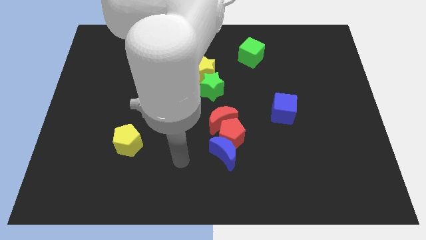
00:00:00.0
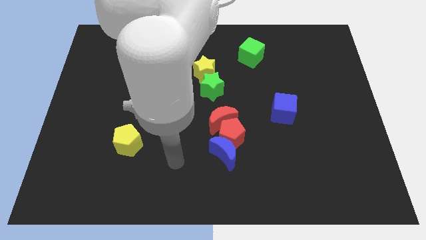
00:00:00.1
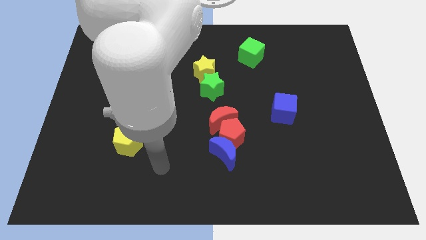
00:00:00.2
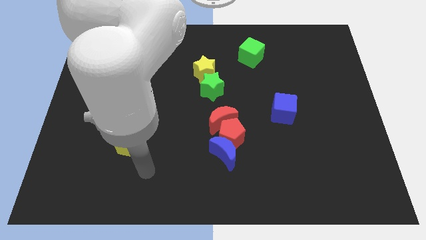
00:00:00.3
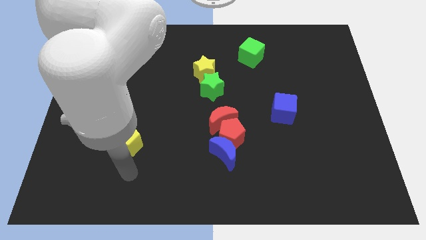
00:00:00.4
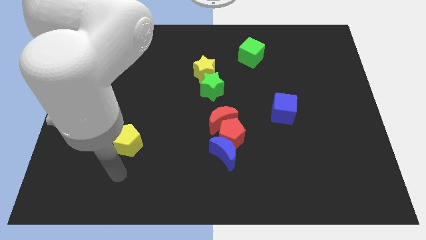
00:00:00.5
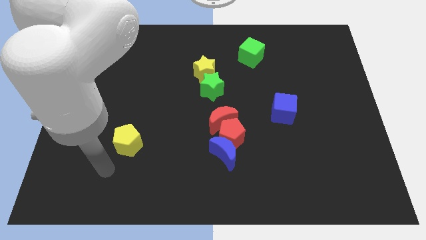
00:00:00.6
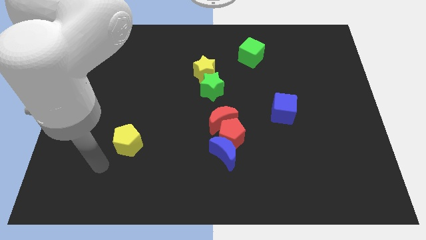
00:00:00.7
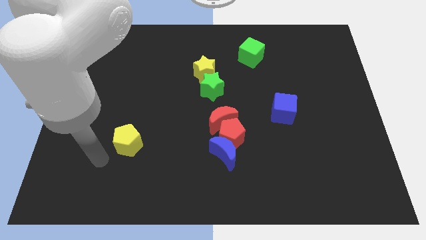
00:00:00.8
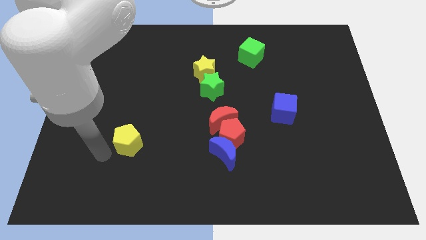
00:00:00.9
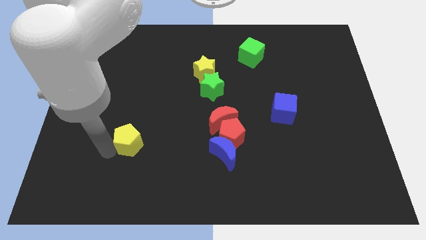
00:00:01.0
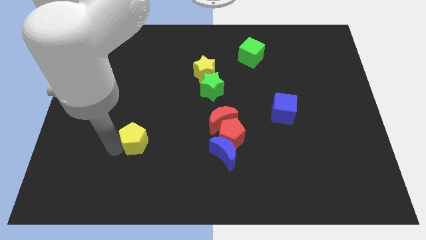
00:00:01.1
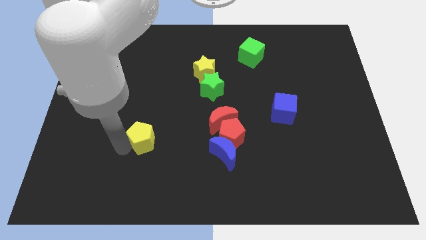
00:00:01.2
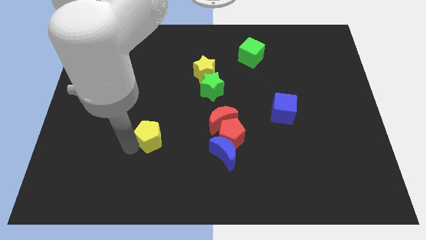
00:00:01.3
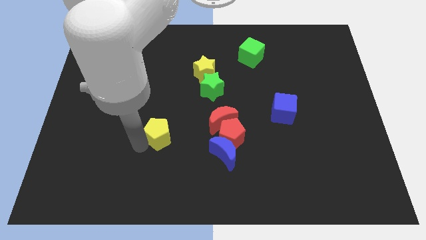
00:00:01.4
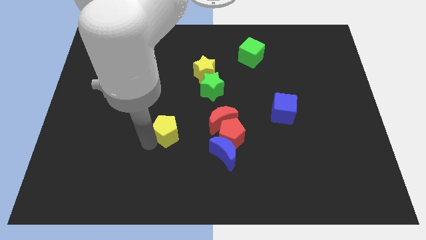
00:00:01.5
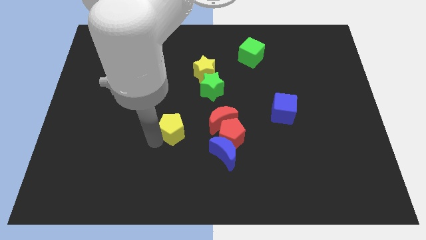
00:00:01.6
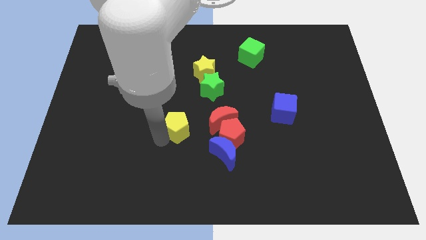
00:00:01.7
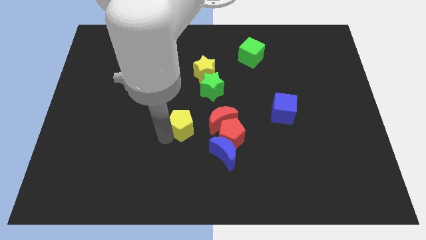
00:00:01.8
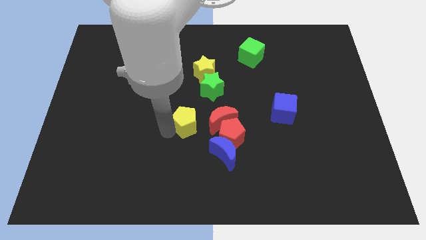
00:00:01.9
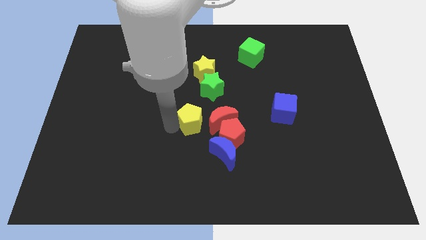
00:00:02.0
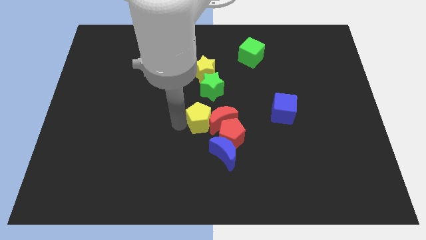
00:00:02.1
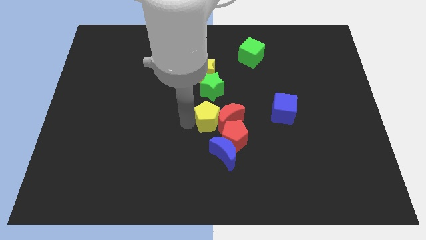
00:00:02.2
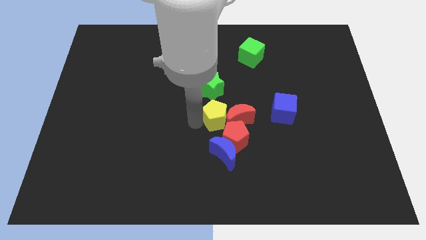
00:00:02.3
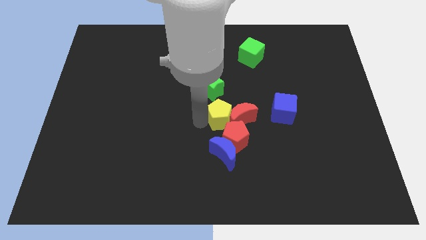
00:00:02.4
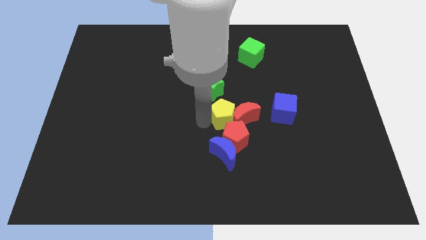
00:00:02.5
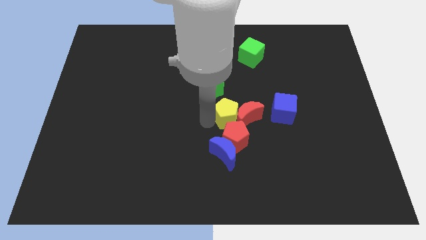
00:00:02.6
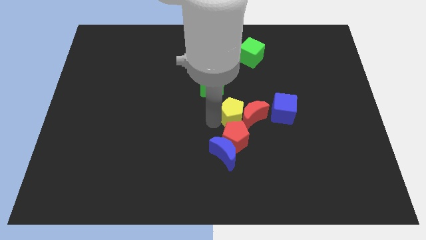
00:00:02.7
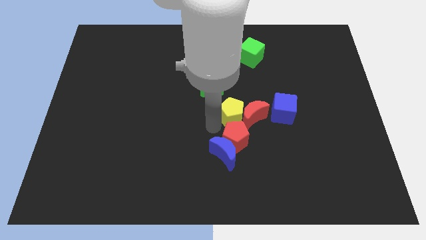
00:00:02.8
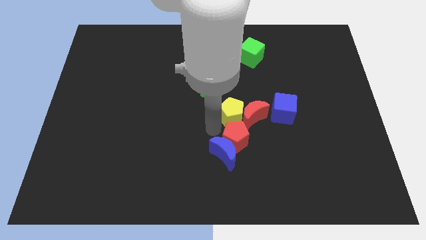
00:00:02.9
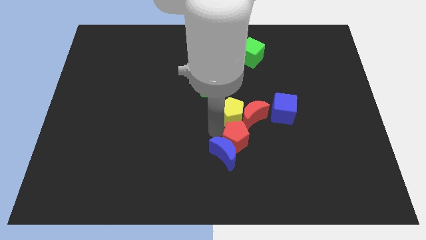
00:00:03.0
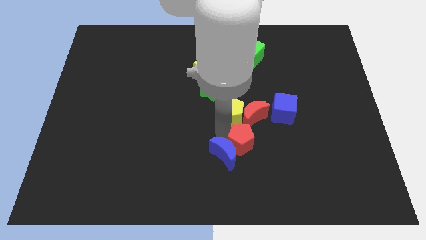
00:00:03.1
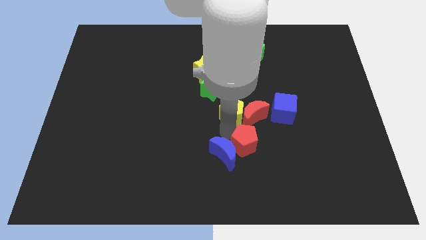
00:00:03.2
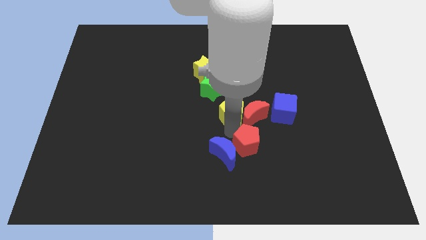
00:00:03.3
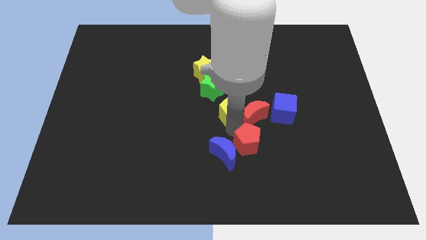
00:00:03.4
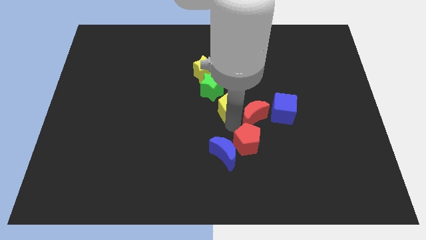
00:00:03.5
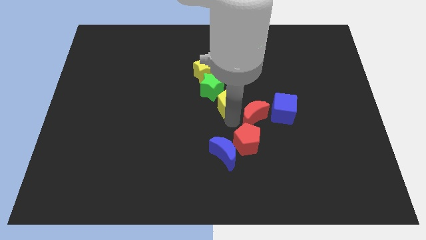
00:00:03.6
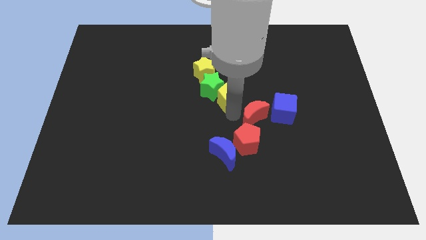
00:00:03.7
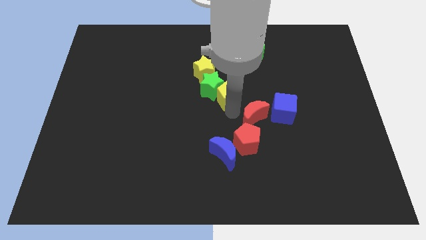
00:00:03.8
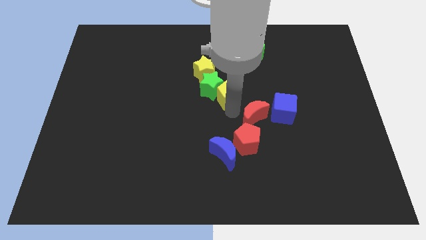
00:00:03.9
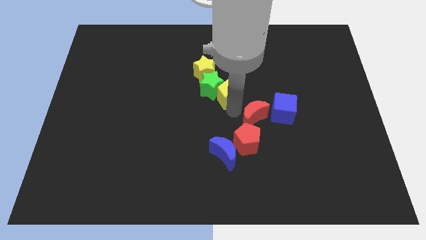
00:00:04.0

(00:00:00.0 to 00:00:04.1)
move the yellow pentagon to the bottom of the green star

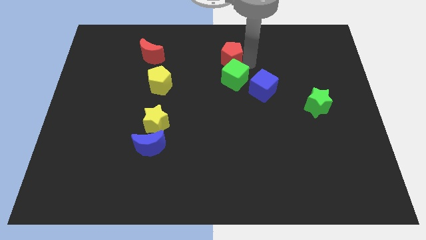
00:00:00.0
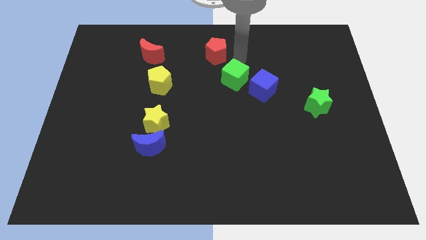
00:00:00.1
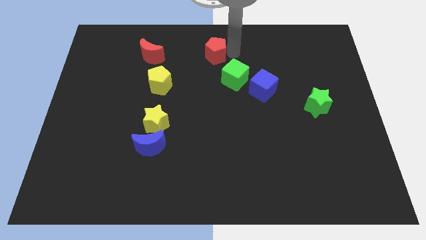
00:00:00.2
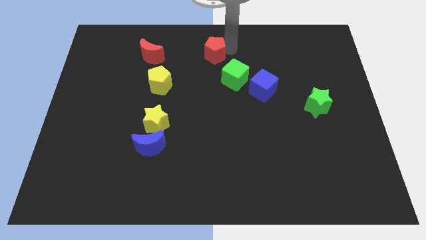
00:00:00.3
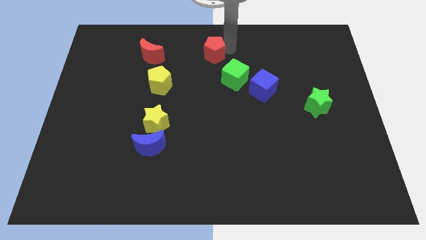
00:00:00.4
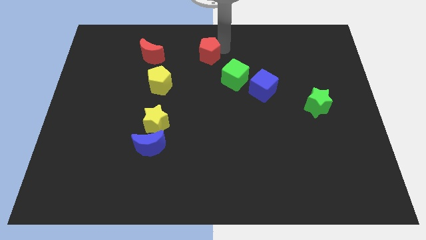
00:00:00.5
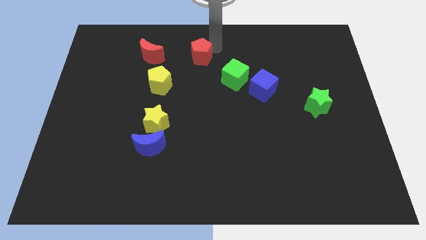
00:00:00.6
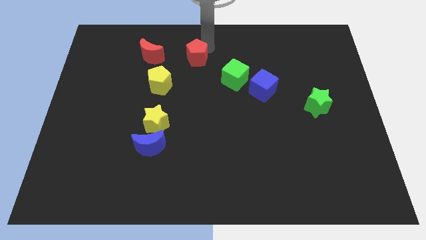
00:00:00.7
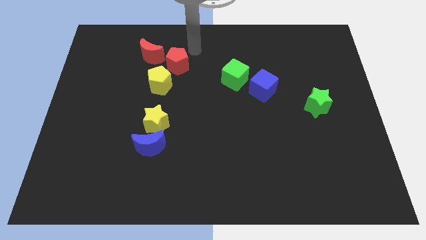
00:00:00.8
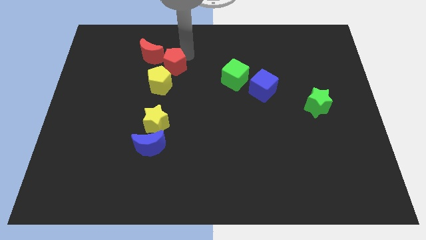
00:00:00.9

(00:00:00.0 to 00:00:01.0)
push the red pentagon at the bottom right of the red moon

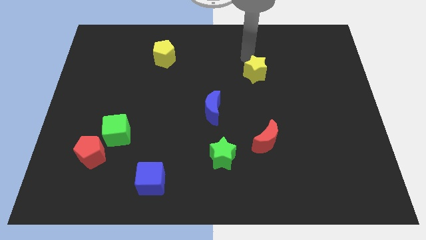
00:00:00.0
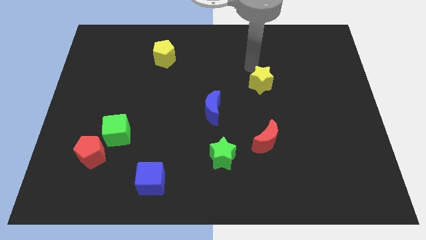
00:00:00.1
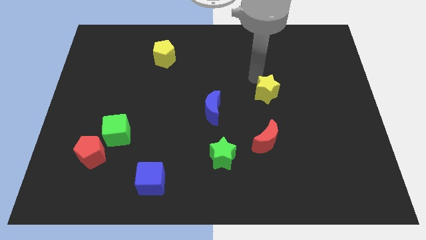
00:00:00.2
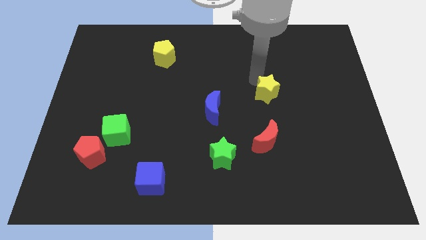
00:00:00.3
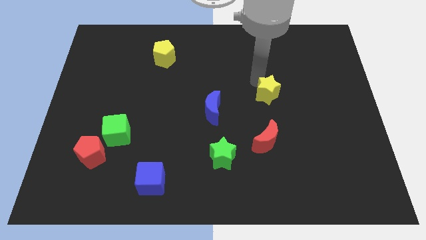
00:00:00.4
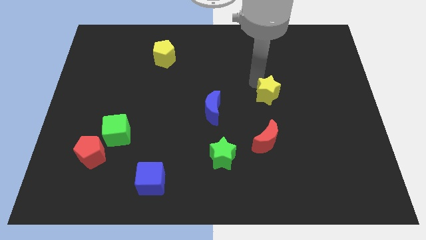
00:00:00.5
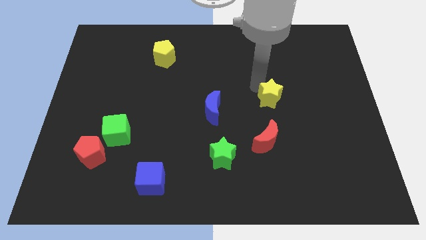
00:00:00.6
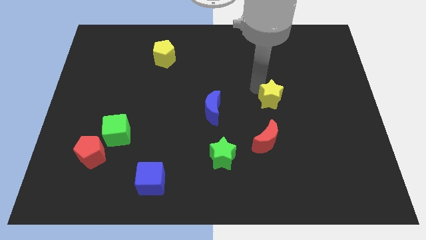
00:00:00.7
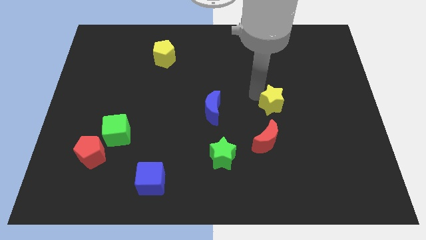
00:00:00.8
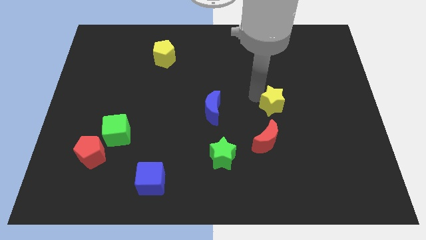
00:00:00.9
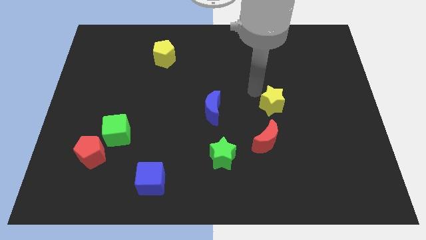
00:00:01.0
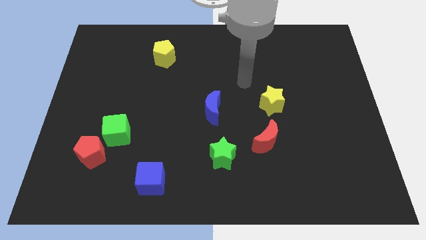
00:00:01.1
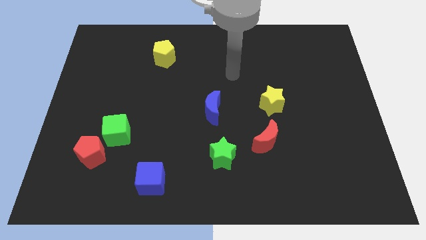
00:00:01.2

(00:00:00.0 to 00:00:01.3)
place the yellow star diagonally on the top right side of the green star

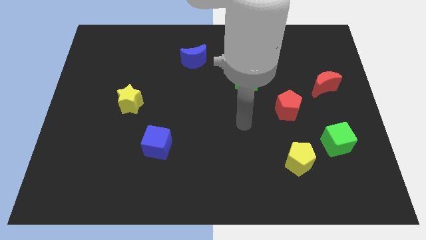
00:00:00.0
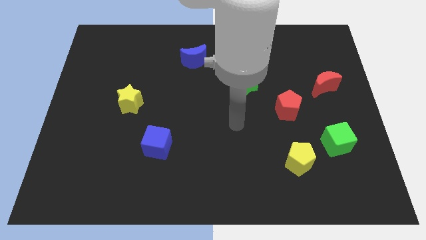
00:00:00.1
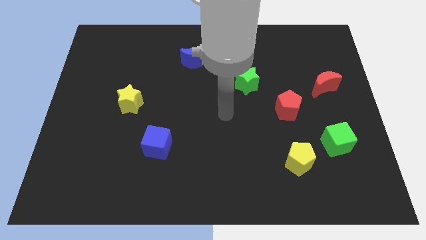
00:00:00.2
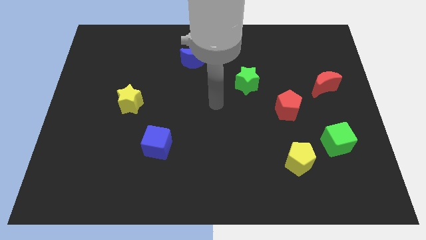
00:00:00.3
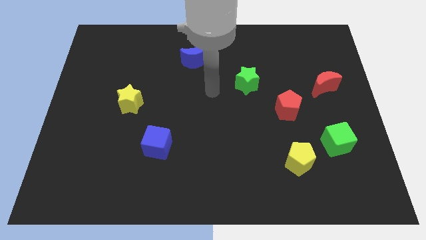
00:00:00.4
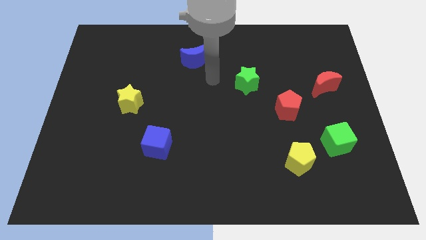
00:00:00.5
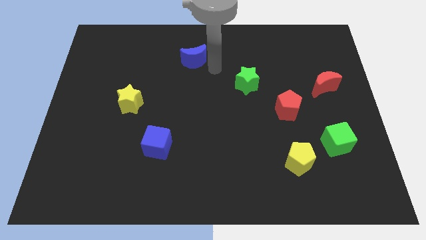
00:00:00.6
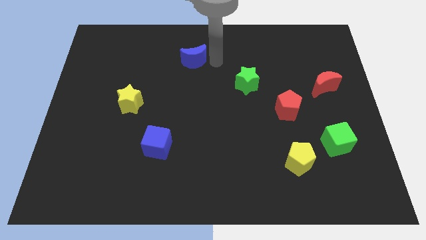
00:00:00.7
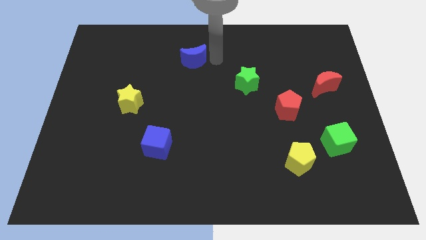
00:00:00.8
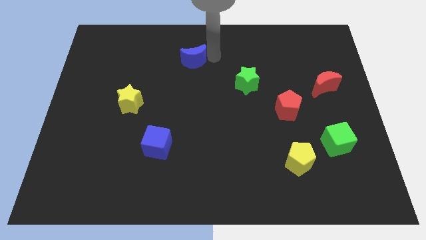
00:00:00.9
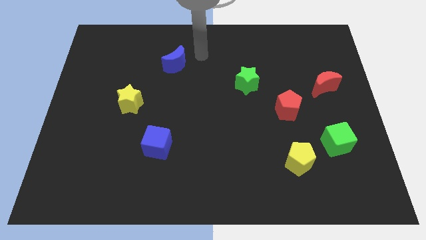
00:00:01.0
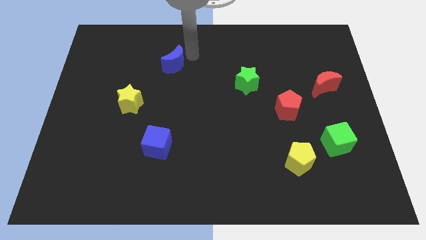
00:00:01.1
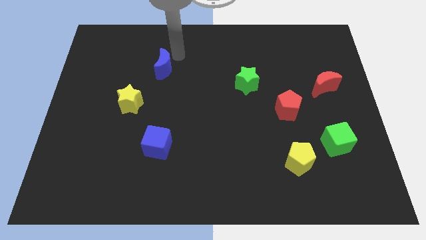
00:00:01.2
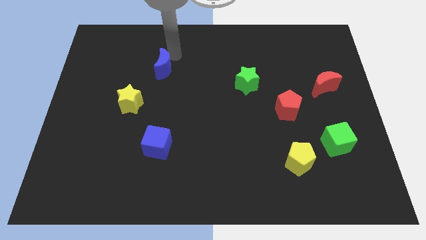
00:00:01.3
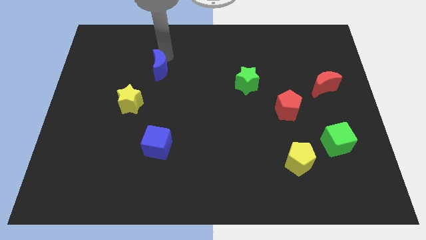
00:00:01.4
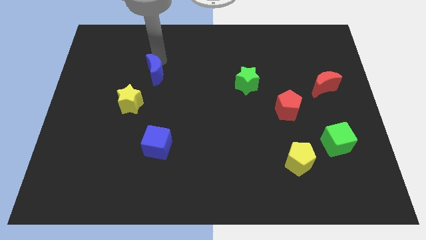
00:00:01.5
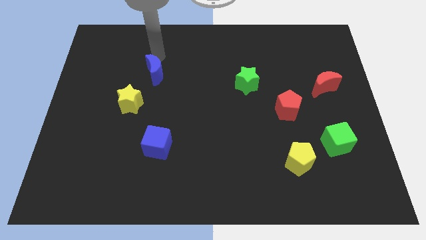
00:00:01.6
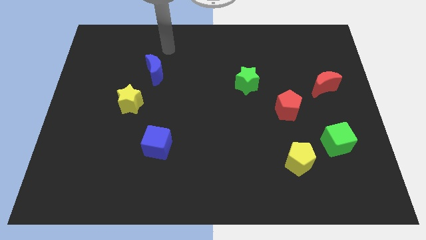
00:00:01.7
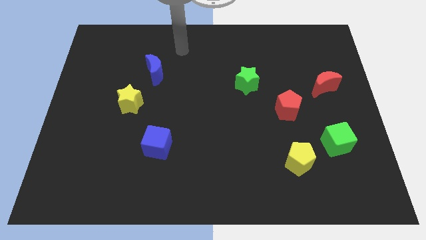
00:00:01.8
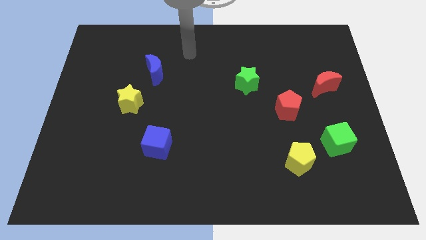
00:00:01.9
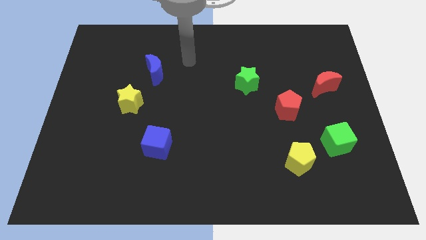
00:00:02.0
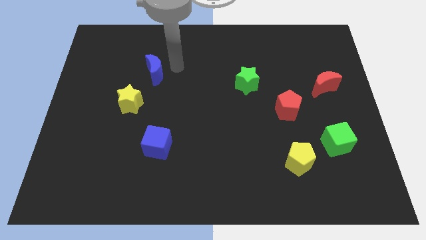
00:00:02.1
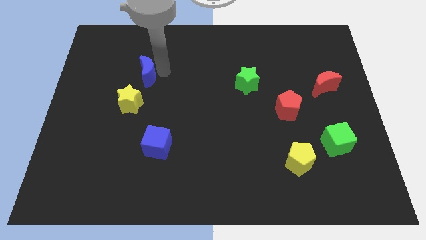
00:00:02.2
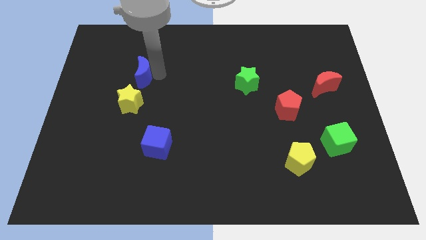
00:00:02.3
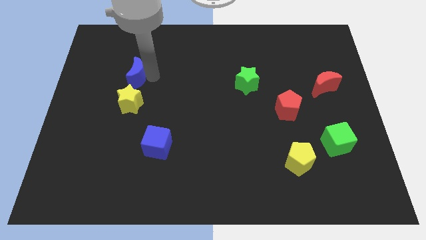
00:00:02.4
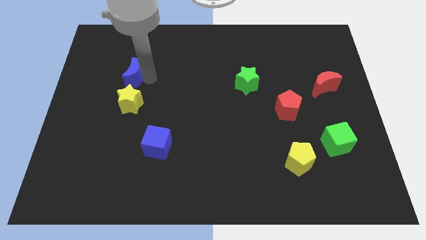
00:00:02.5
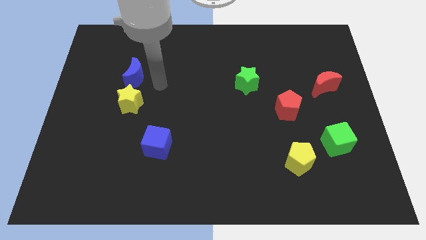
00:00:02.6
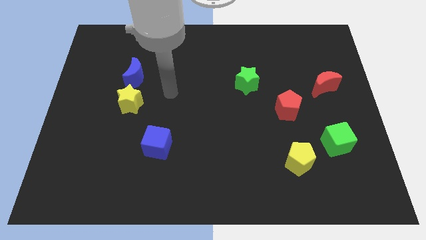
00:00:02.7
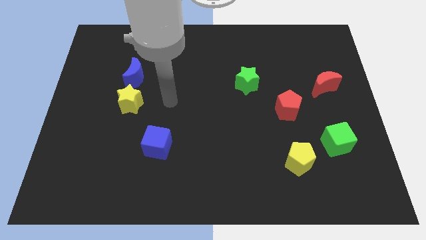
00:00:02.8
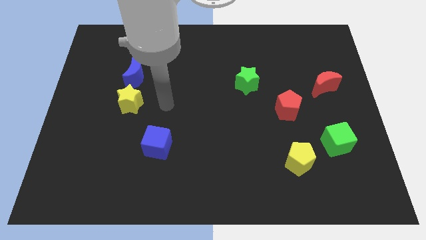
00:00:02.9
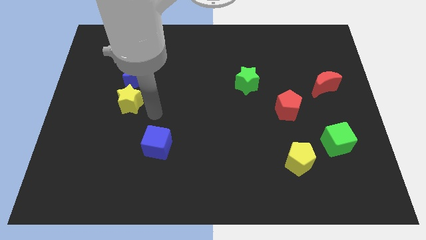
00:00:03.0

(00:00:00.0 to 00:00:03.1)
move the blue crescent to the top of the yellow star
